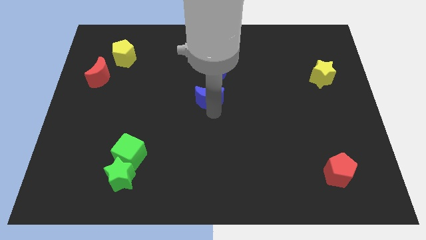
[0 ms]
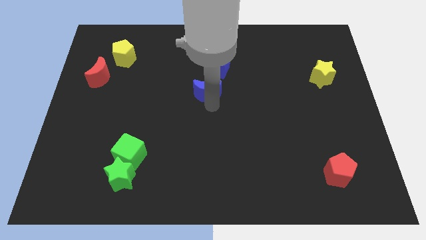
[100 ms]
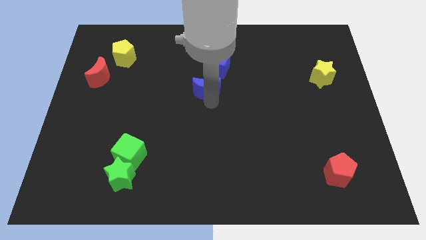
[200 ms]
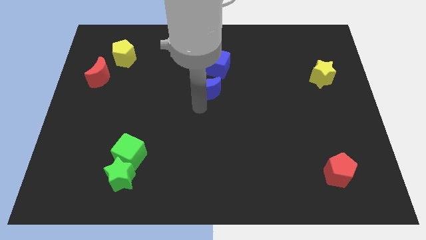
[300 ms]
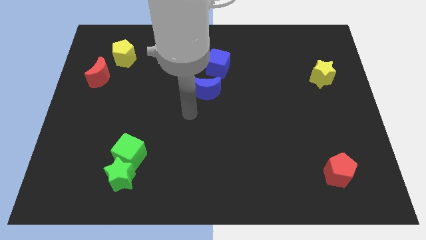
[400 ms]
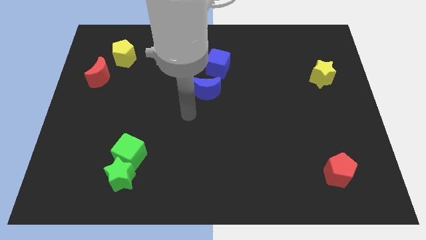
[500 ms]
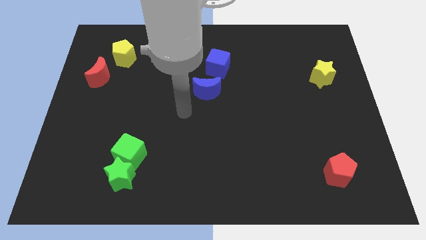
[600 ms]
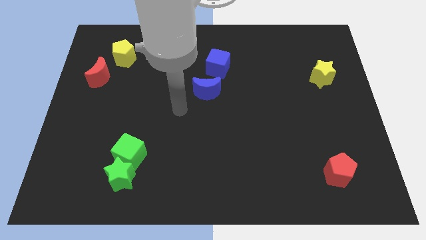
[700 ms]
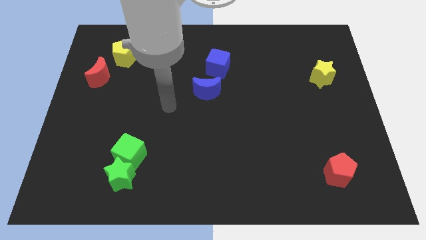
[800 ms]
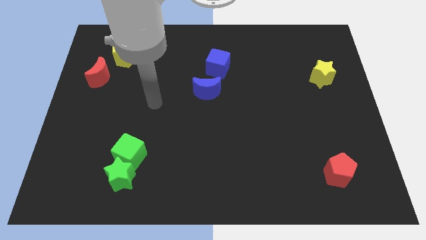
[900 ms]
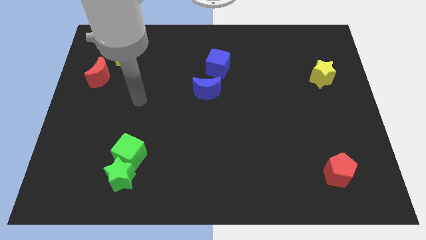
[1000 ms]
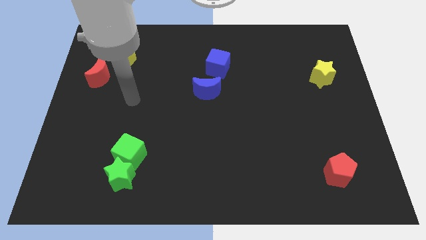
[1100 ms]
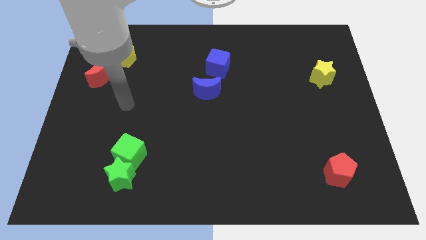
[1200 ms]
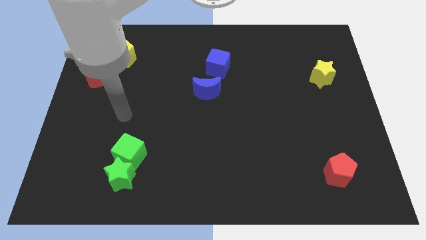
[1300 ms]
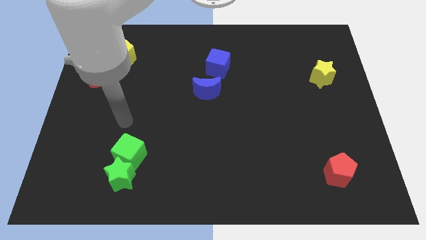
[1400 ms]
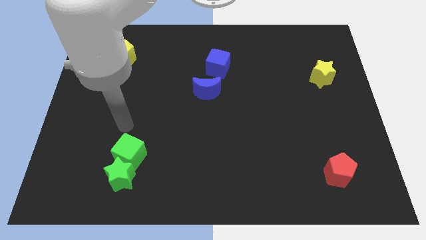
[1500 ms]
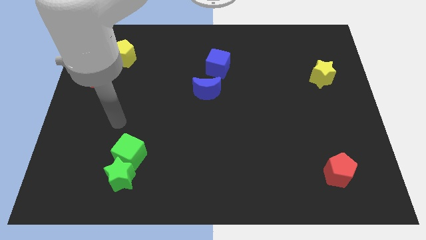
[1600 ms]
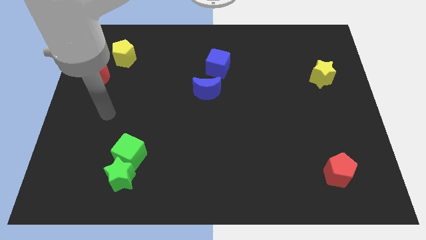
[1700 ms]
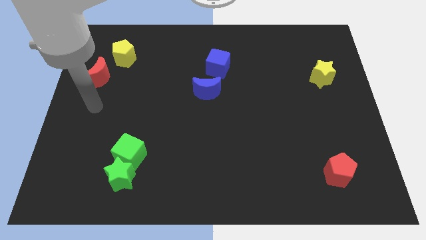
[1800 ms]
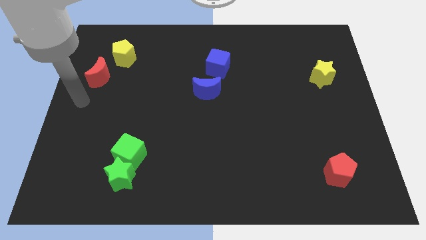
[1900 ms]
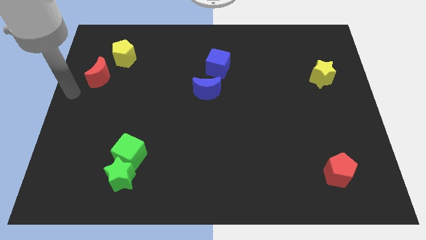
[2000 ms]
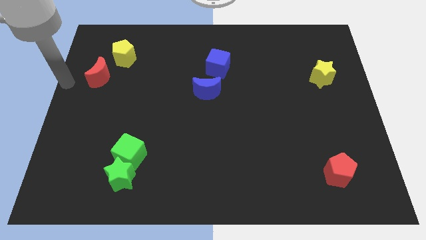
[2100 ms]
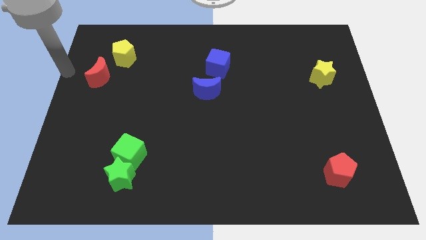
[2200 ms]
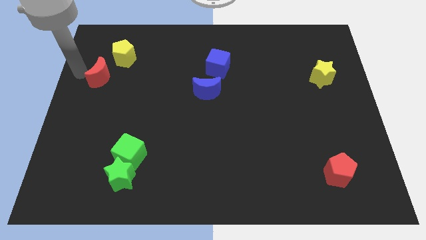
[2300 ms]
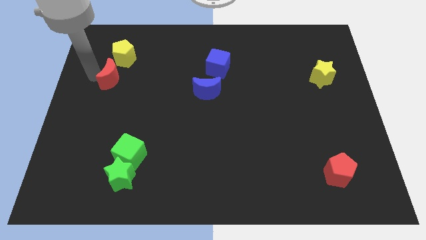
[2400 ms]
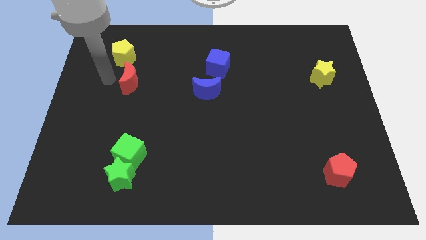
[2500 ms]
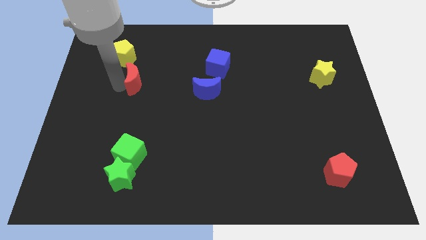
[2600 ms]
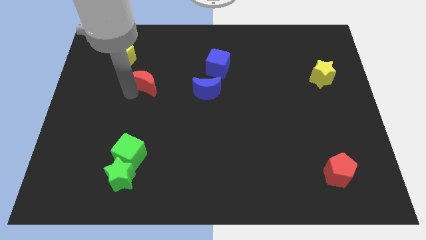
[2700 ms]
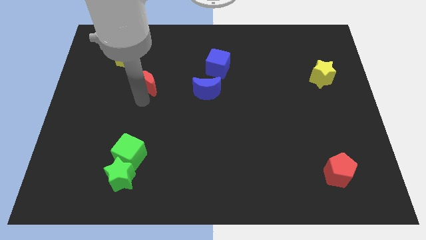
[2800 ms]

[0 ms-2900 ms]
move red moon to the bottom right of yellow pentagon

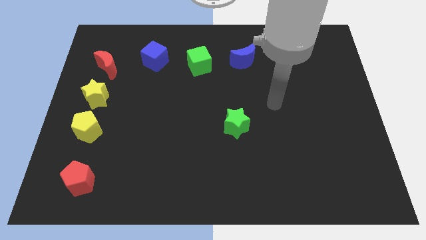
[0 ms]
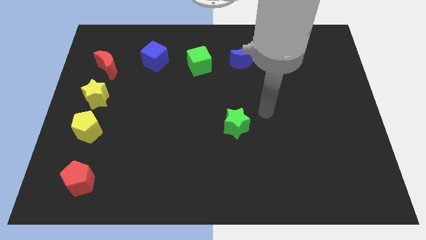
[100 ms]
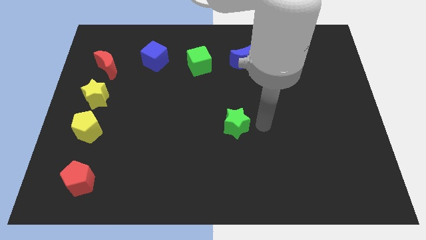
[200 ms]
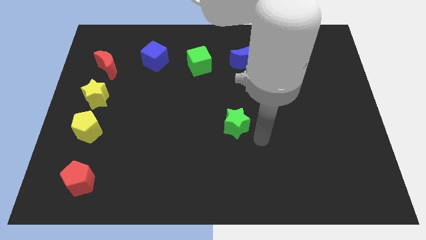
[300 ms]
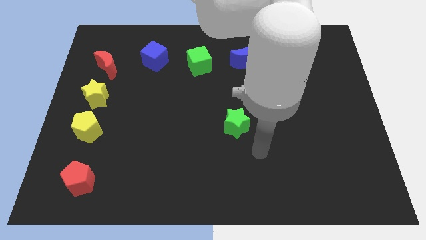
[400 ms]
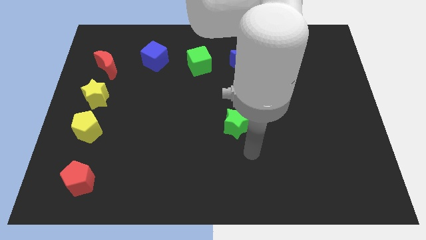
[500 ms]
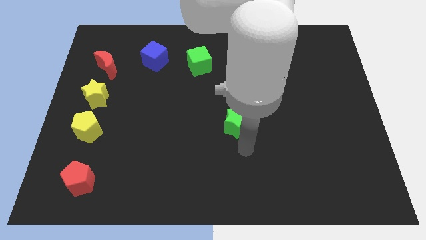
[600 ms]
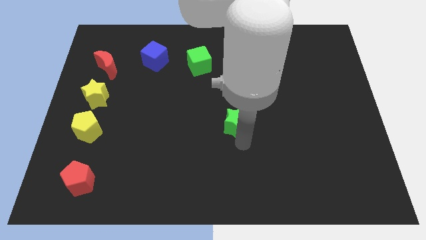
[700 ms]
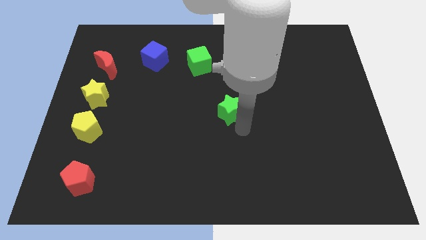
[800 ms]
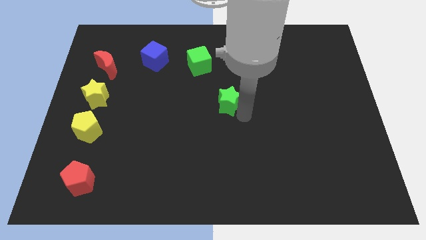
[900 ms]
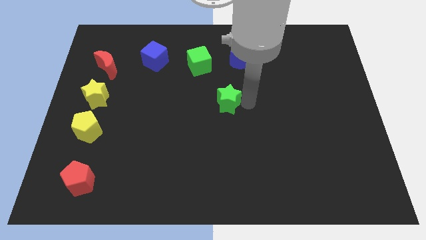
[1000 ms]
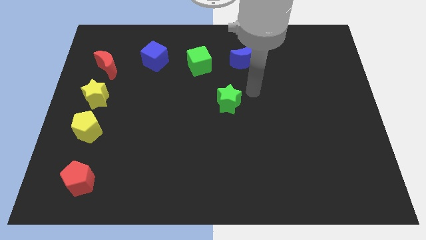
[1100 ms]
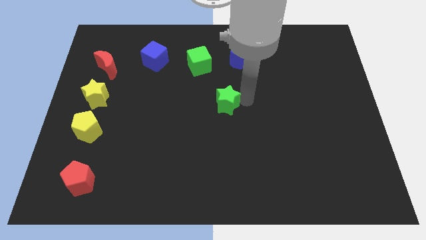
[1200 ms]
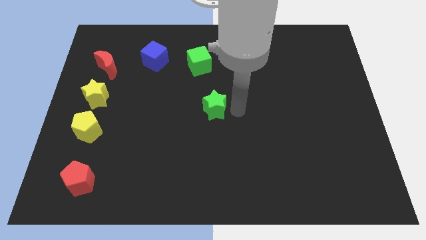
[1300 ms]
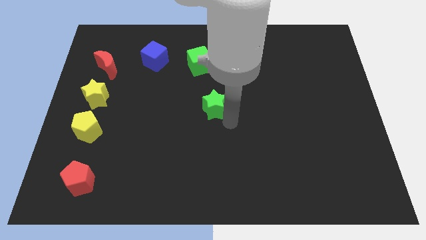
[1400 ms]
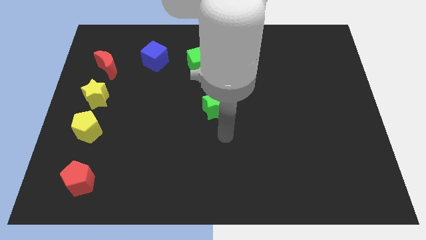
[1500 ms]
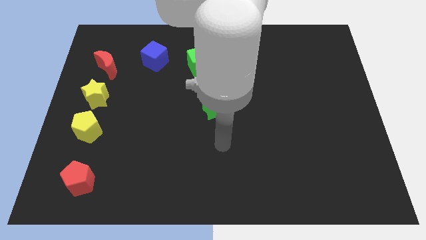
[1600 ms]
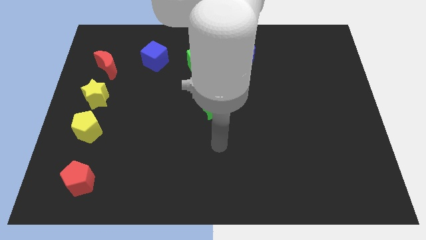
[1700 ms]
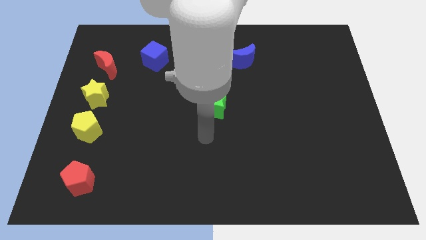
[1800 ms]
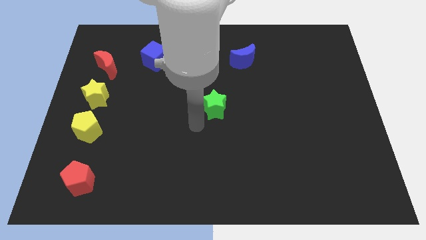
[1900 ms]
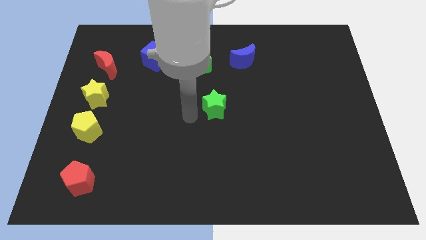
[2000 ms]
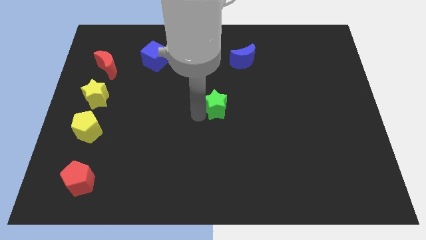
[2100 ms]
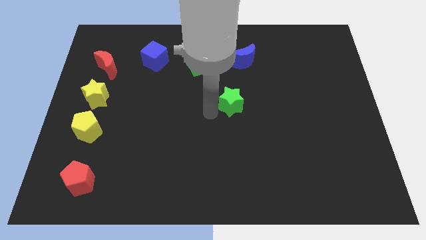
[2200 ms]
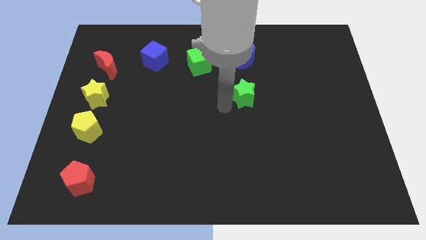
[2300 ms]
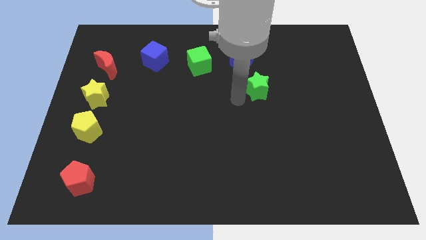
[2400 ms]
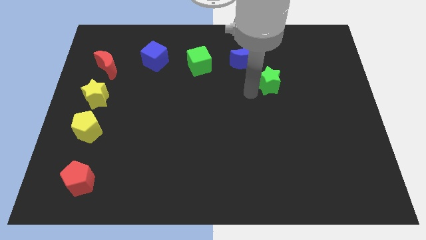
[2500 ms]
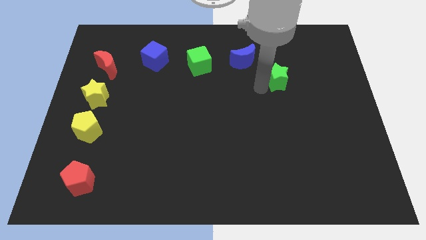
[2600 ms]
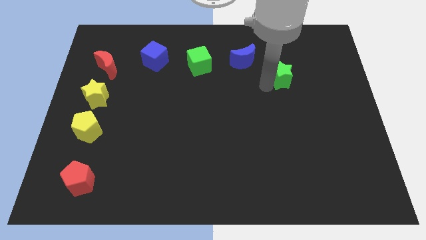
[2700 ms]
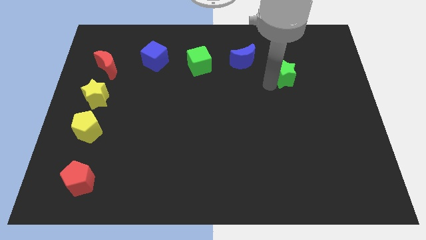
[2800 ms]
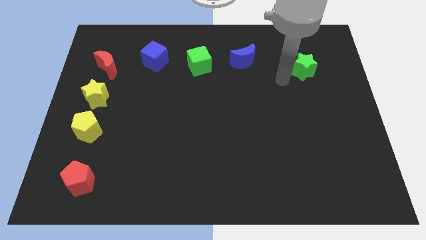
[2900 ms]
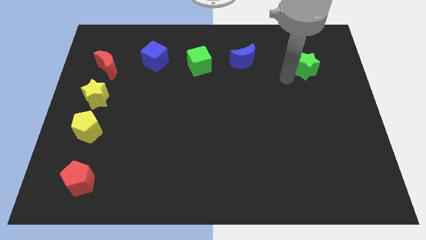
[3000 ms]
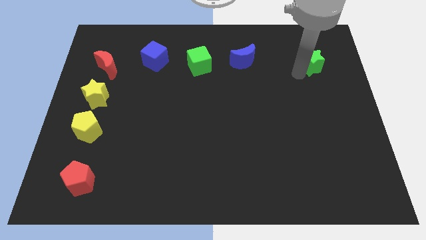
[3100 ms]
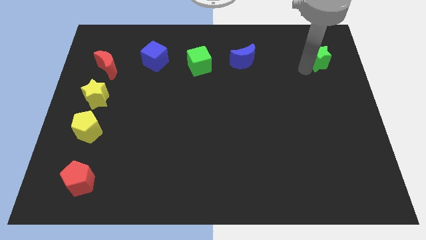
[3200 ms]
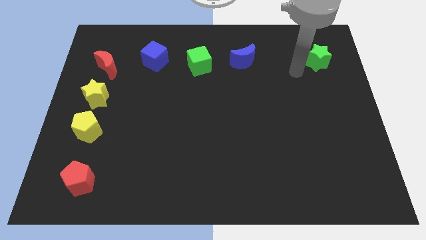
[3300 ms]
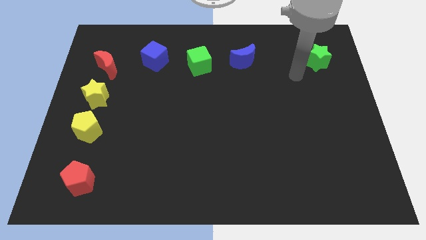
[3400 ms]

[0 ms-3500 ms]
place the green star to the right of the blue moon

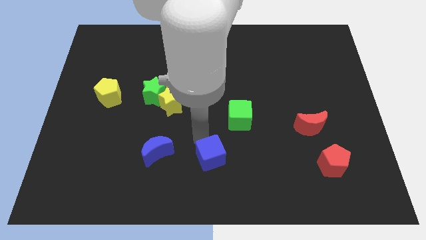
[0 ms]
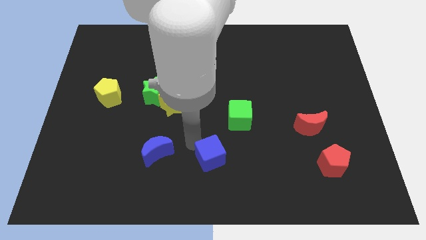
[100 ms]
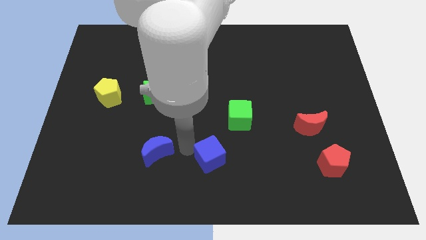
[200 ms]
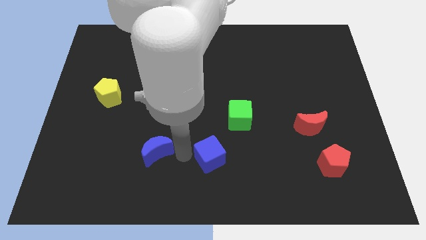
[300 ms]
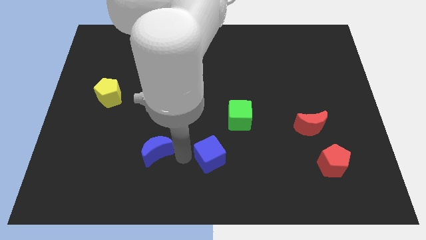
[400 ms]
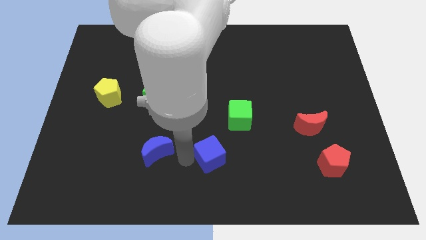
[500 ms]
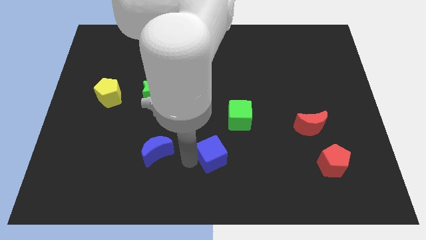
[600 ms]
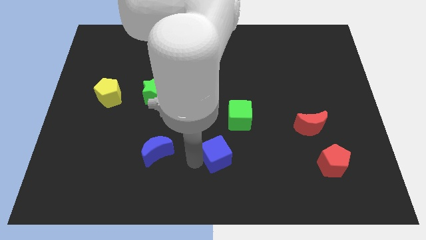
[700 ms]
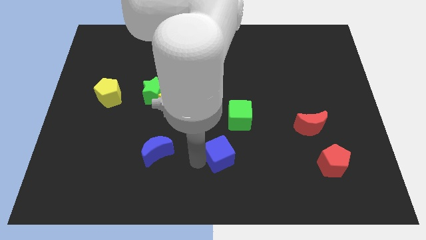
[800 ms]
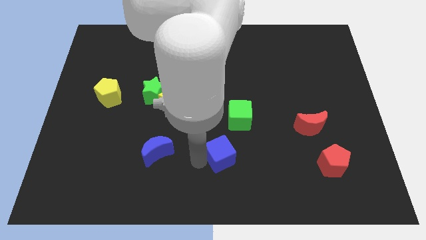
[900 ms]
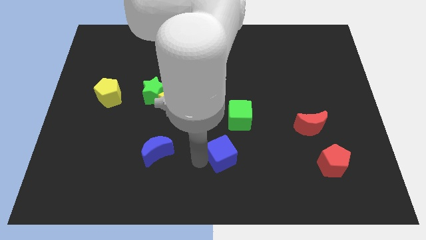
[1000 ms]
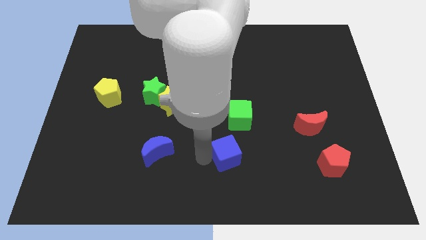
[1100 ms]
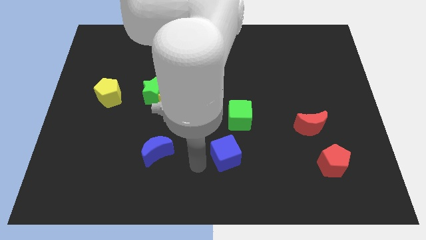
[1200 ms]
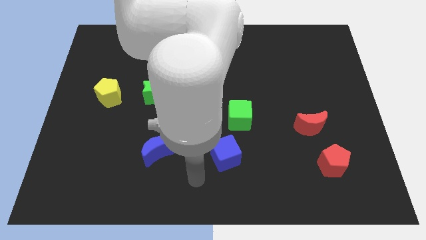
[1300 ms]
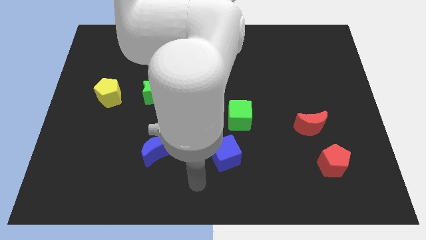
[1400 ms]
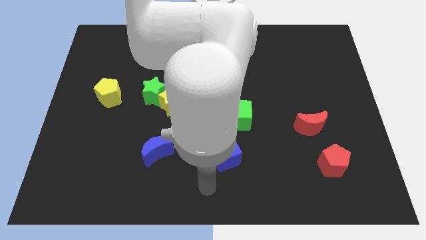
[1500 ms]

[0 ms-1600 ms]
place blue cube to the bottom left of green cube

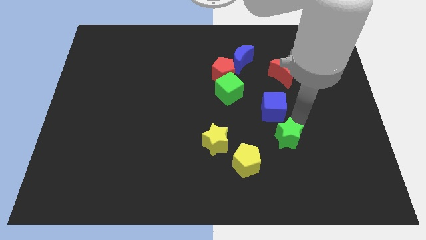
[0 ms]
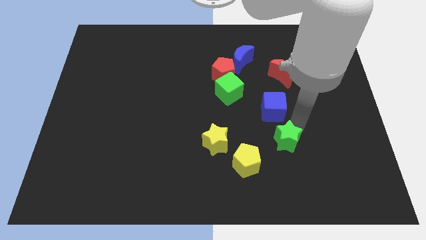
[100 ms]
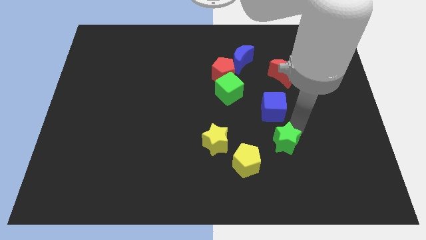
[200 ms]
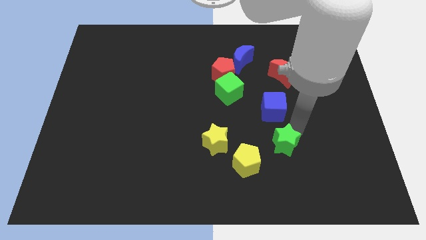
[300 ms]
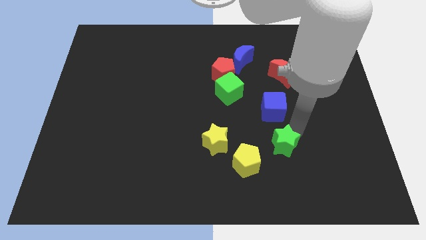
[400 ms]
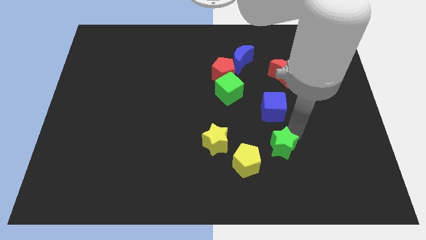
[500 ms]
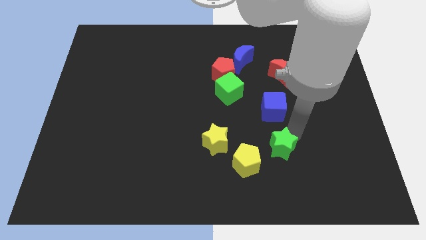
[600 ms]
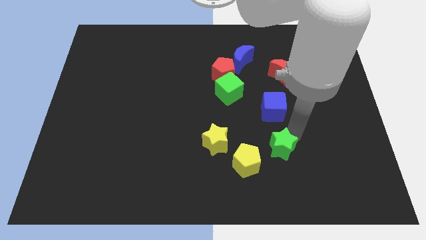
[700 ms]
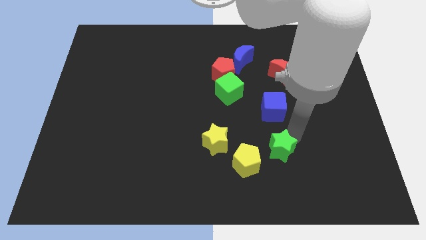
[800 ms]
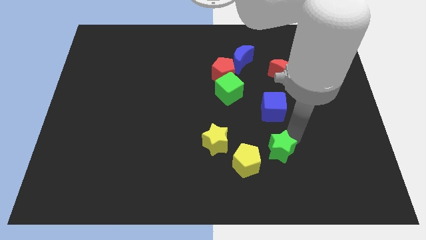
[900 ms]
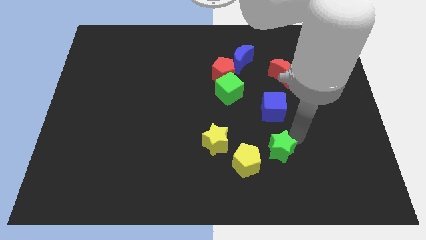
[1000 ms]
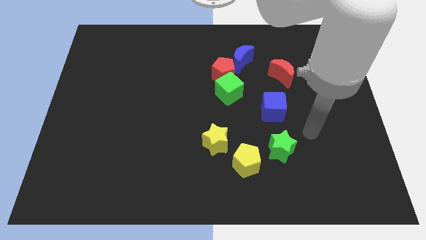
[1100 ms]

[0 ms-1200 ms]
put the green star vertically below the blue cube
